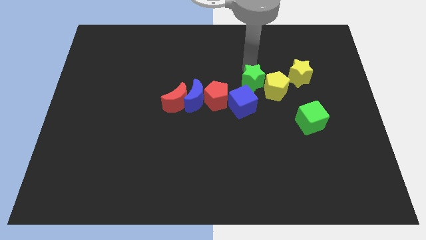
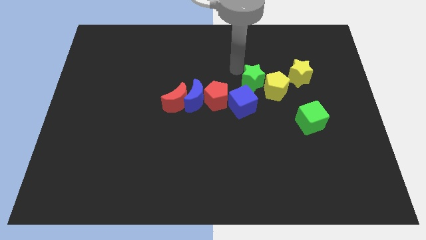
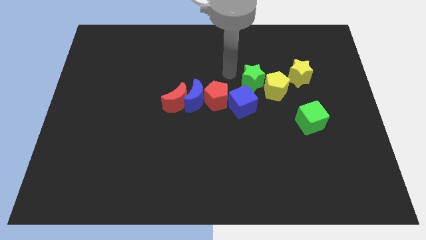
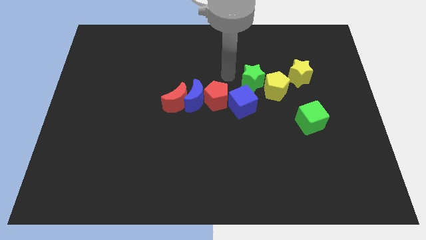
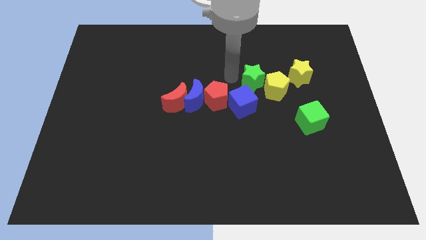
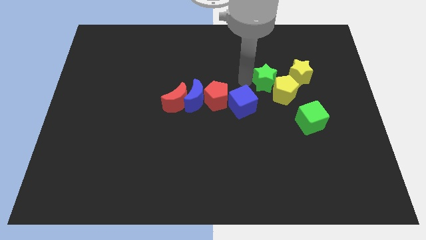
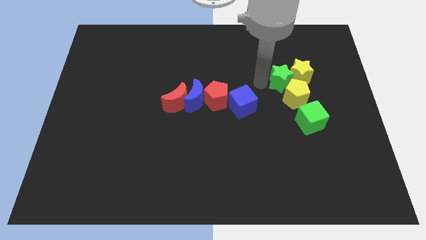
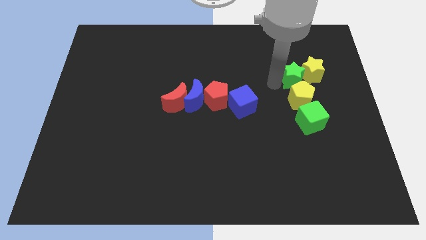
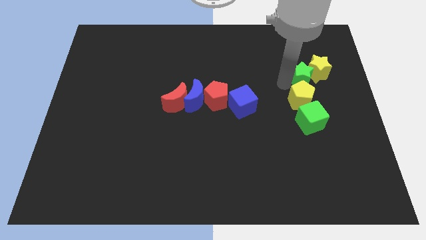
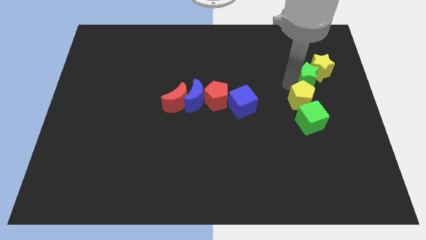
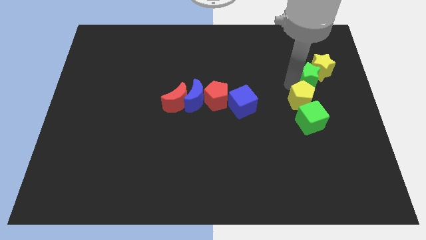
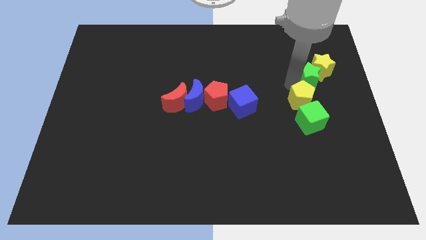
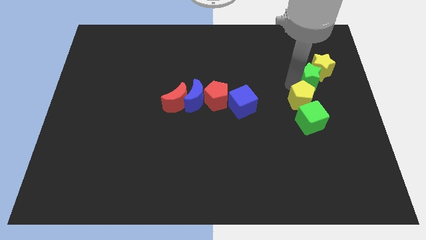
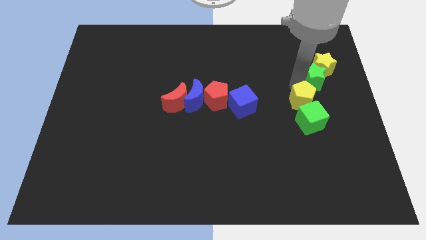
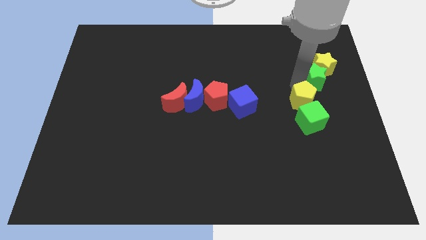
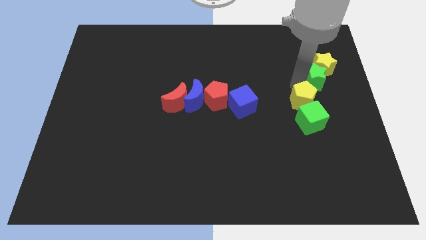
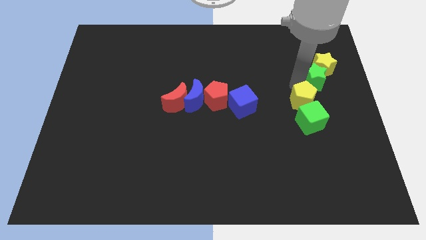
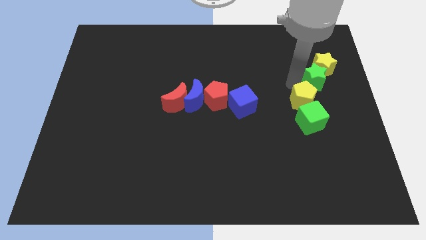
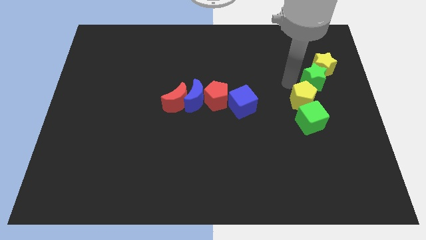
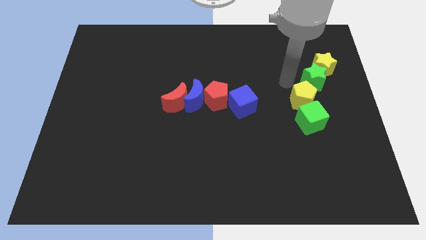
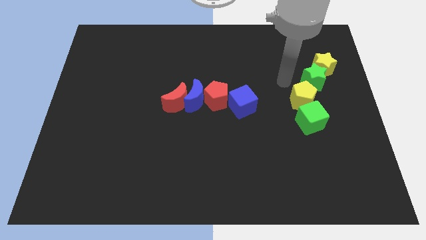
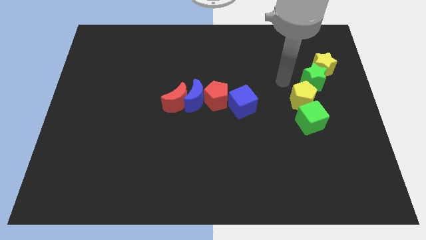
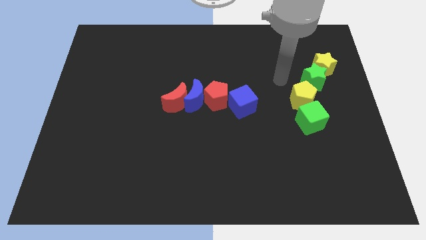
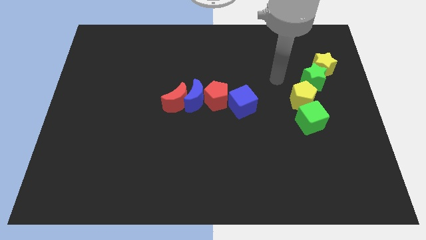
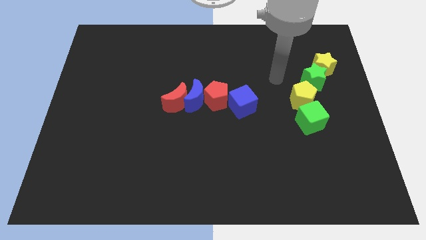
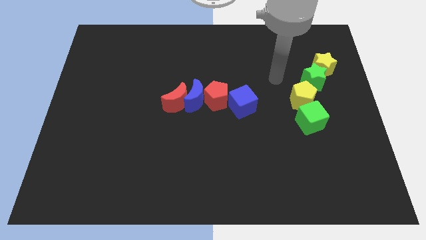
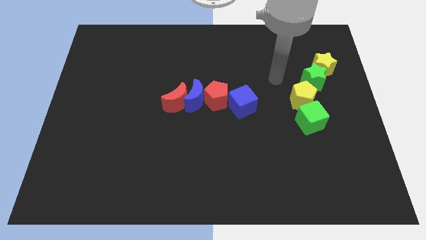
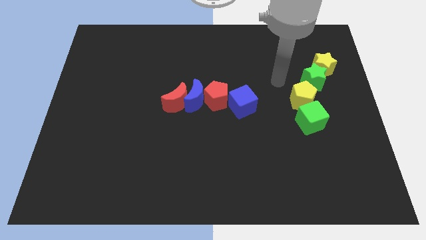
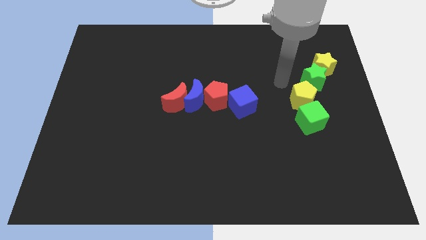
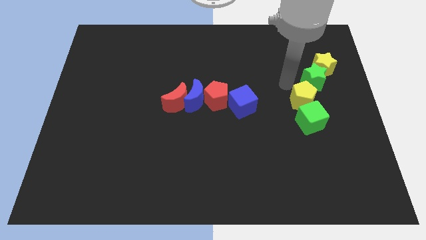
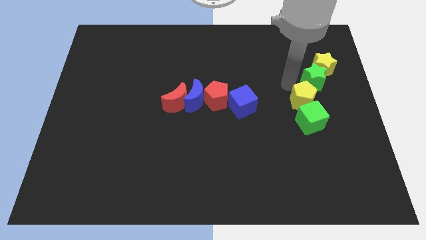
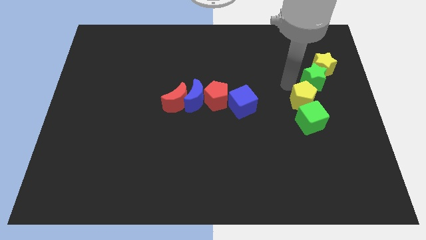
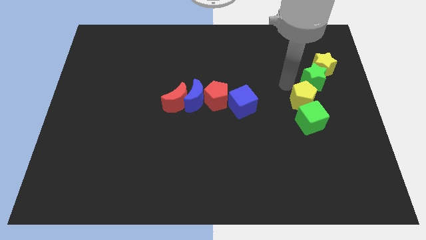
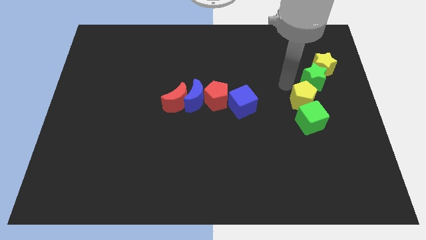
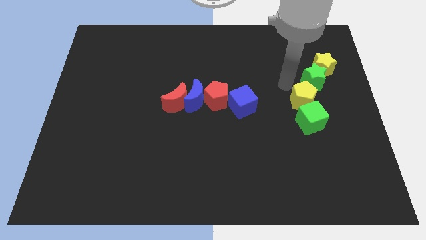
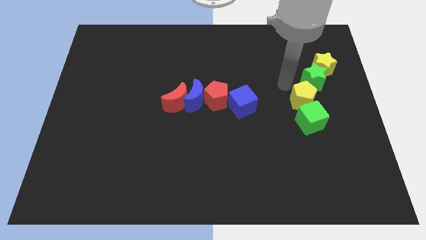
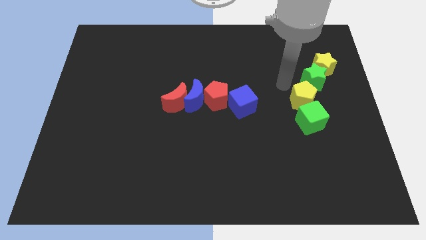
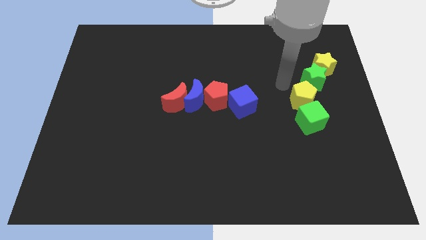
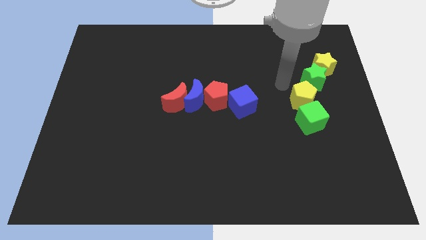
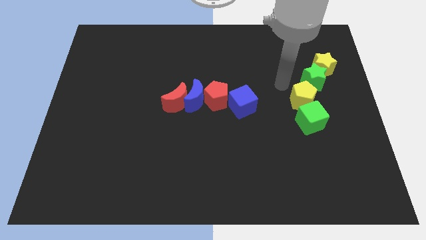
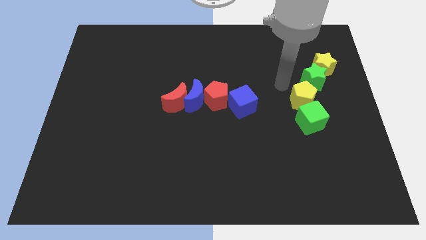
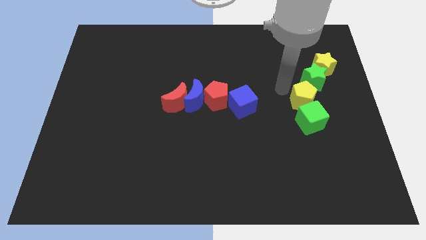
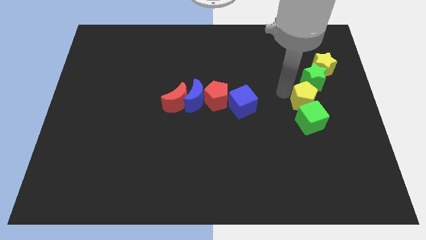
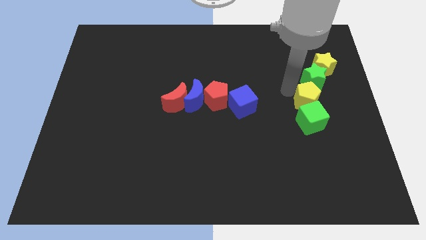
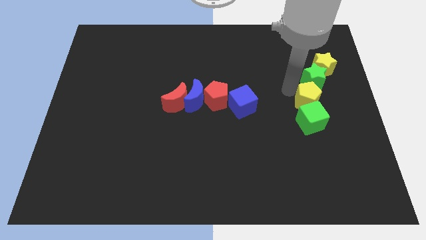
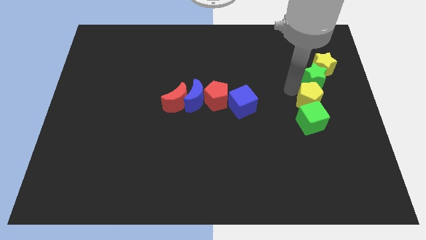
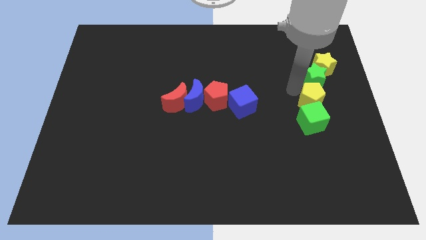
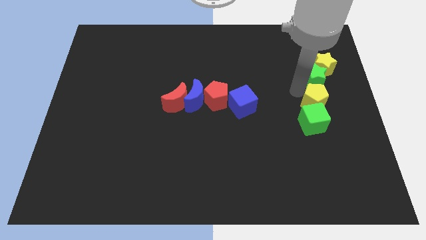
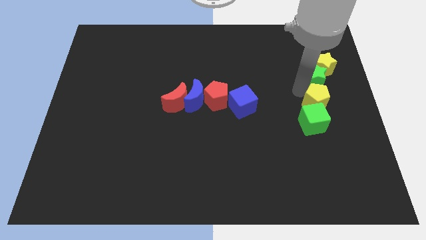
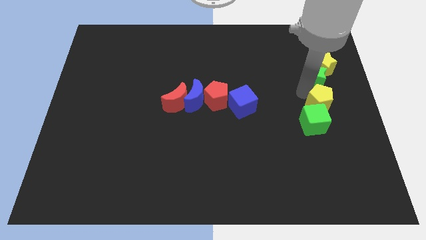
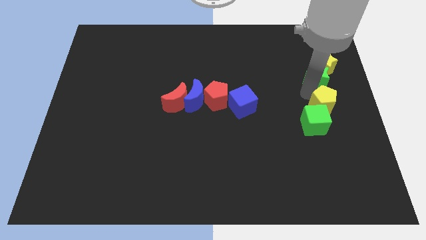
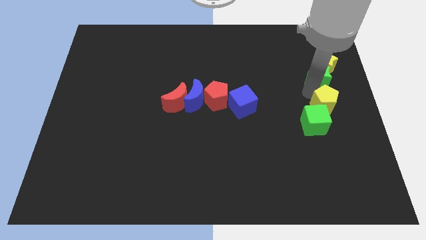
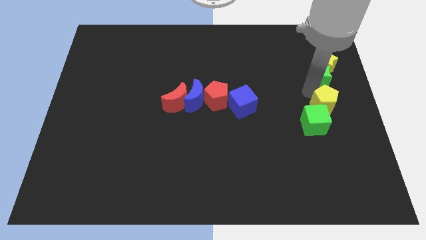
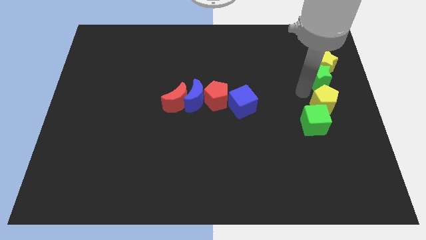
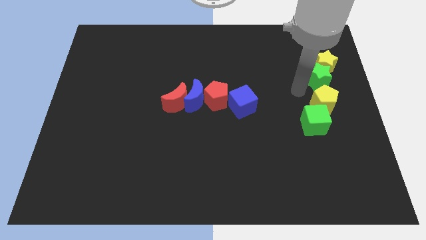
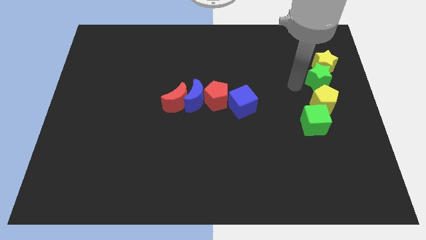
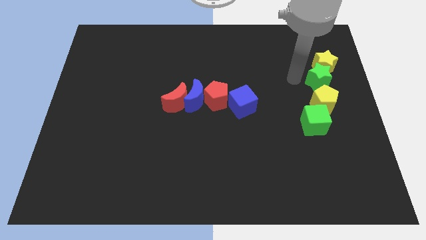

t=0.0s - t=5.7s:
push the green and yellow blocks to the right side of the board

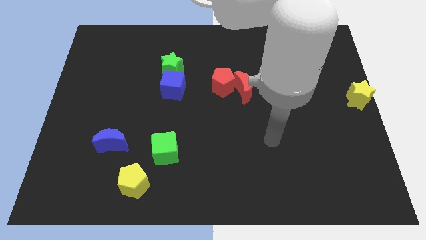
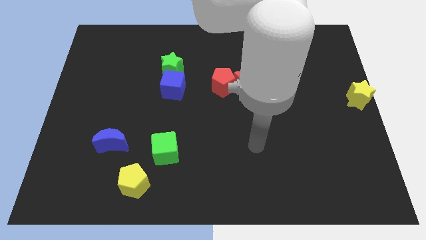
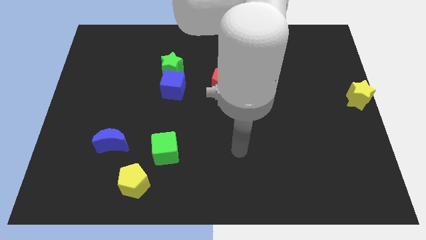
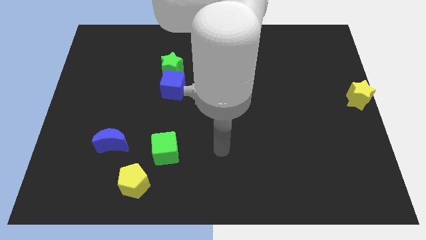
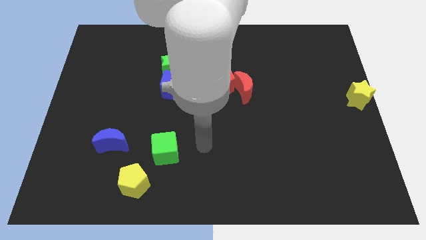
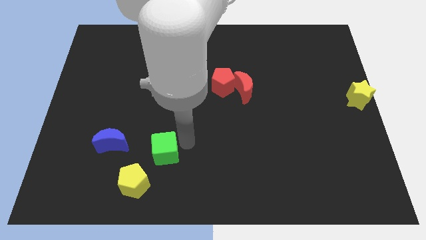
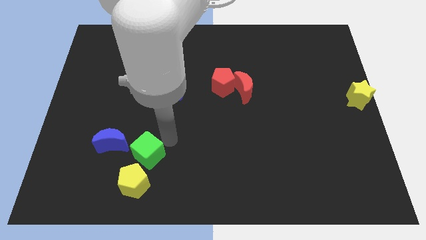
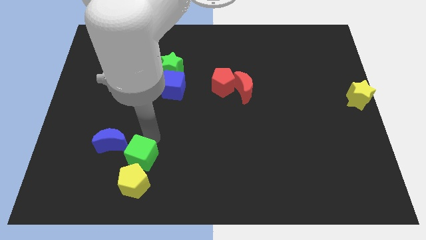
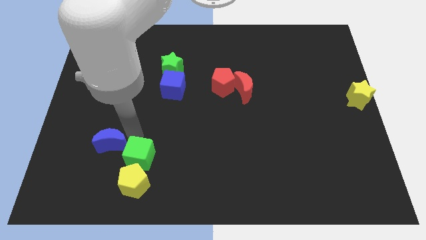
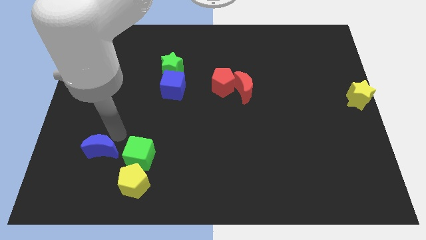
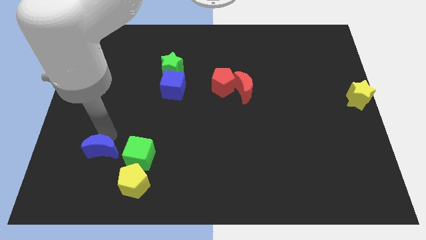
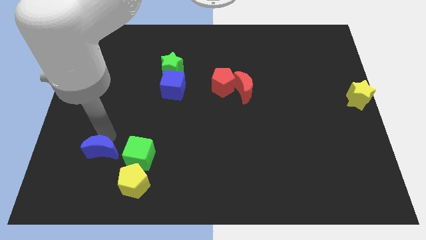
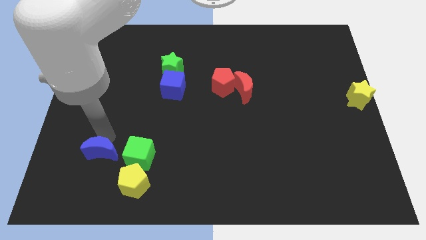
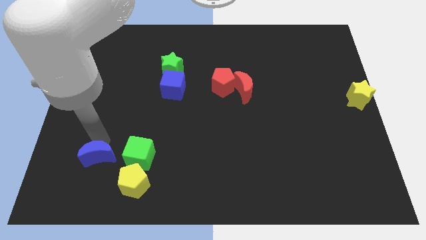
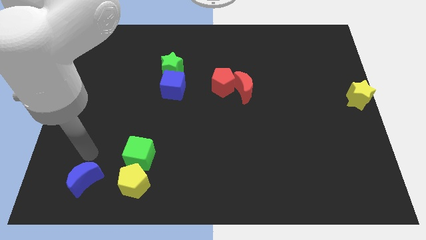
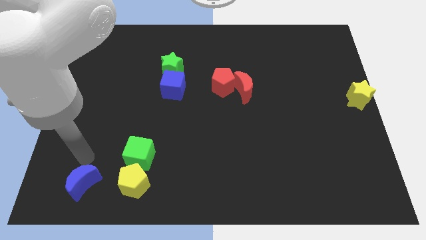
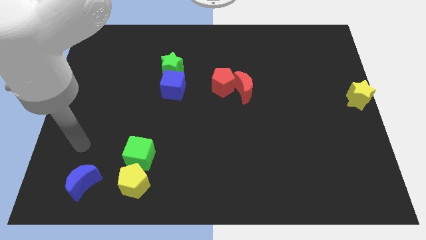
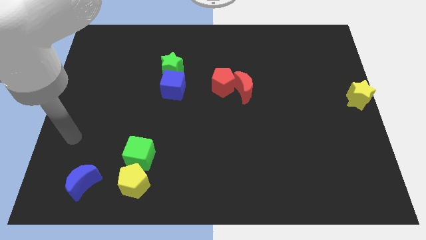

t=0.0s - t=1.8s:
push the blue moon towards the bottom left of the board

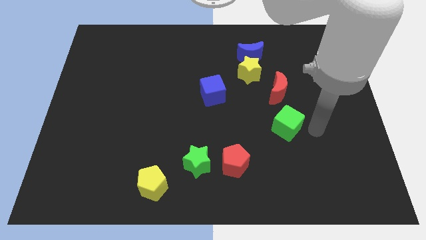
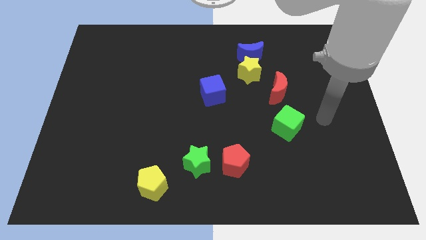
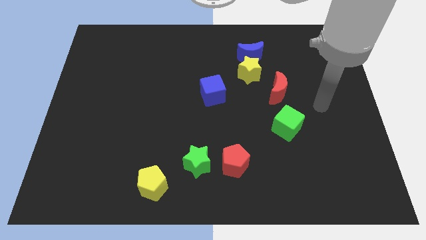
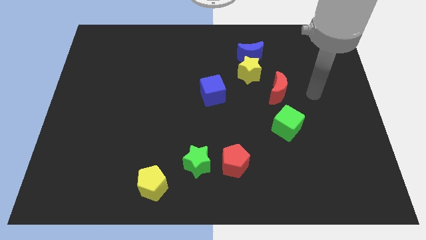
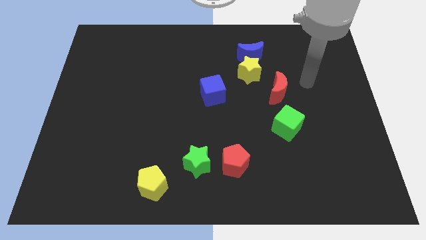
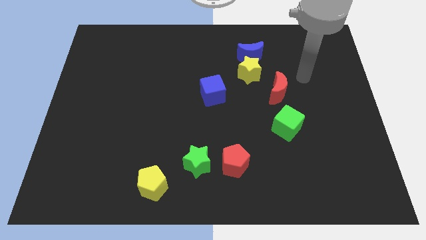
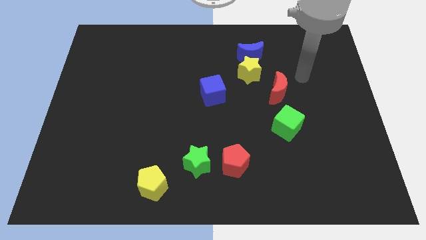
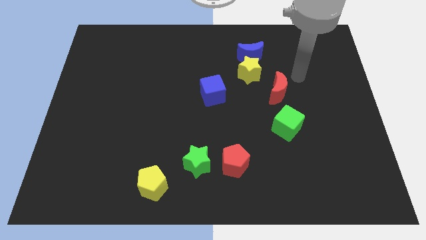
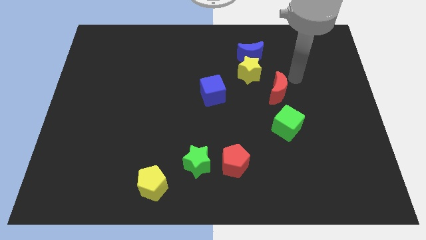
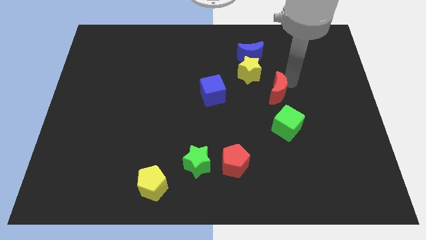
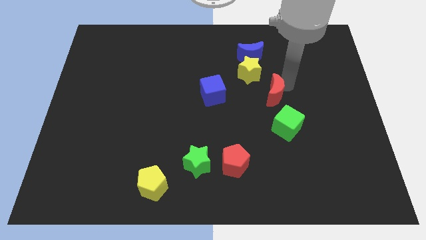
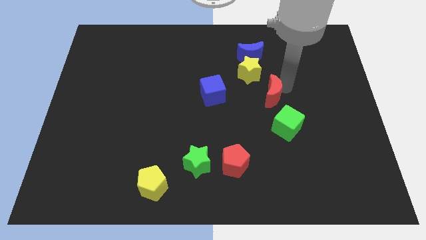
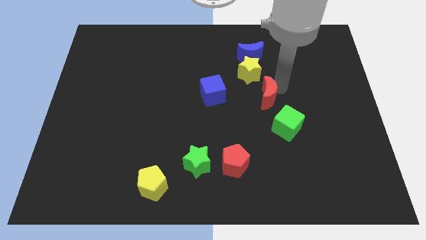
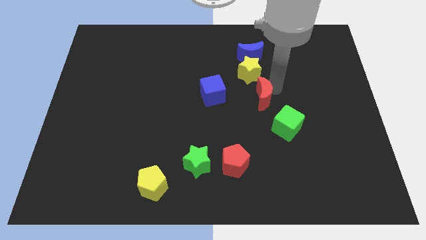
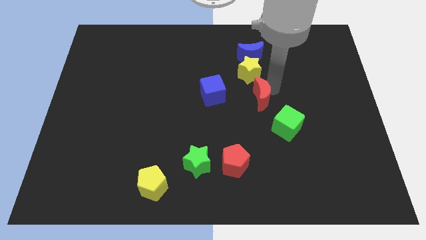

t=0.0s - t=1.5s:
slide the red moon diagonally to the green cube
